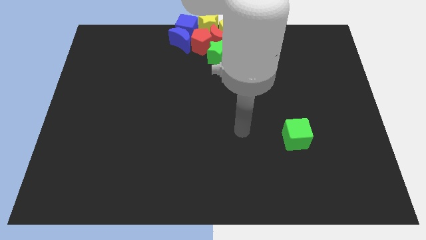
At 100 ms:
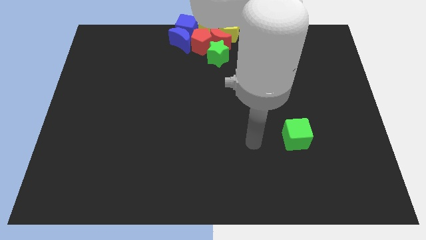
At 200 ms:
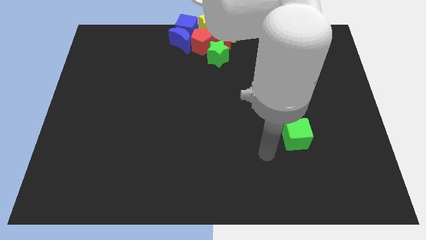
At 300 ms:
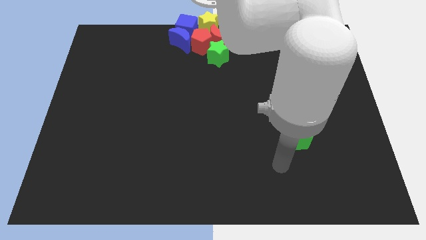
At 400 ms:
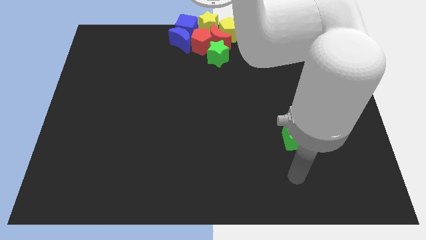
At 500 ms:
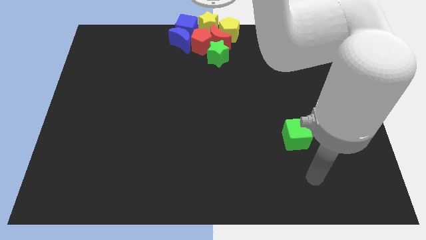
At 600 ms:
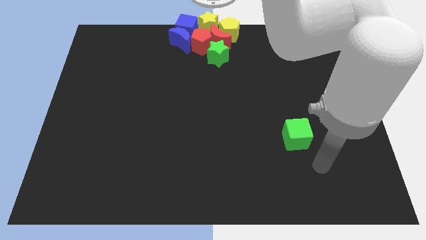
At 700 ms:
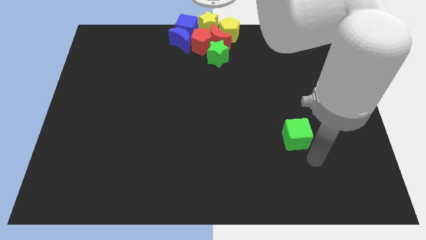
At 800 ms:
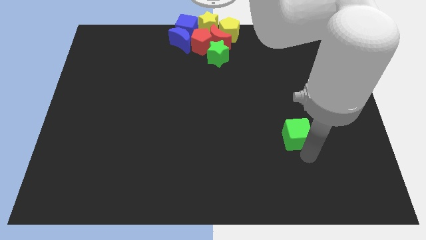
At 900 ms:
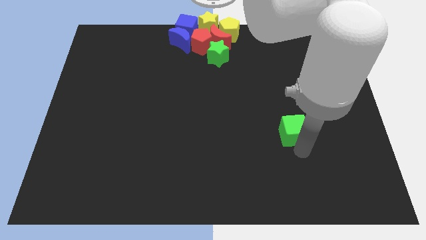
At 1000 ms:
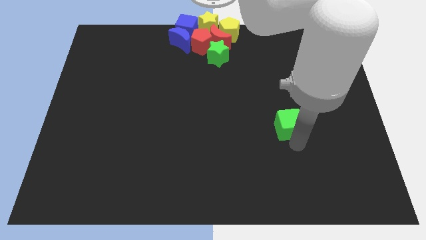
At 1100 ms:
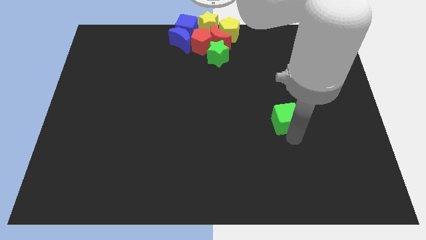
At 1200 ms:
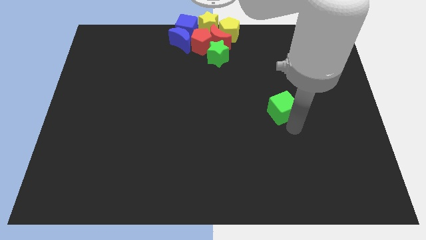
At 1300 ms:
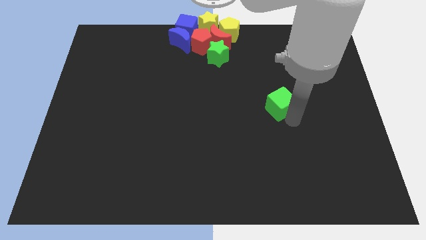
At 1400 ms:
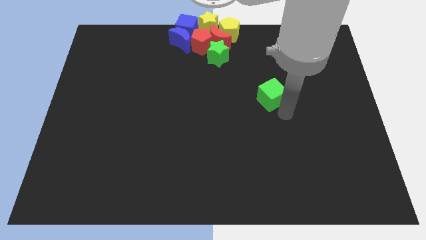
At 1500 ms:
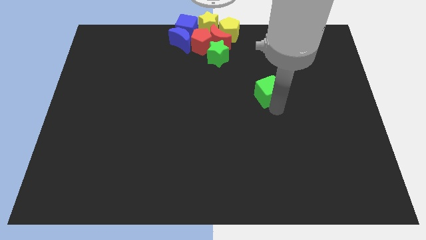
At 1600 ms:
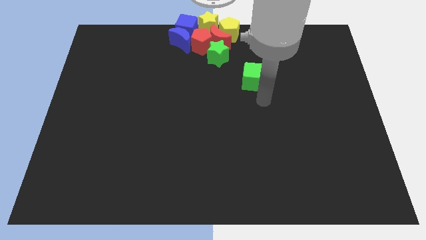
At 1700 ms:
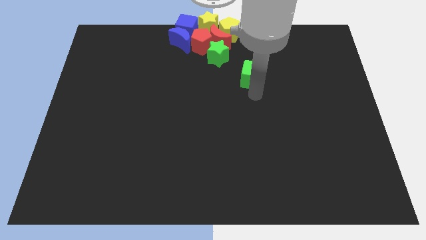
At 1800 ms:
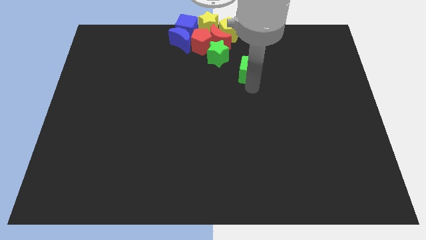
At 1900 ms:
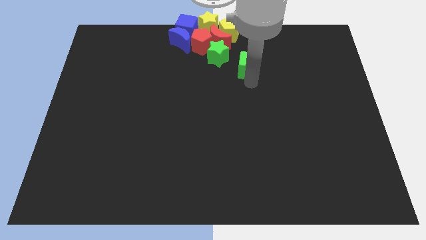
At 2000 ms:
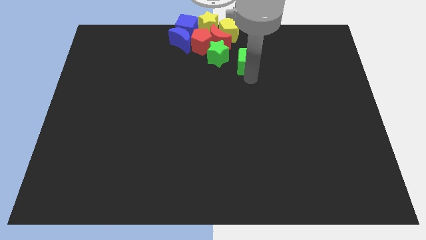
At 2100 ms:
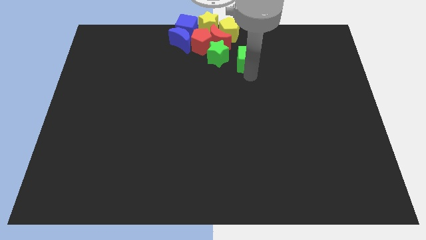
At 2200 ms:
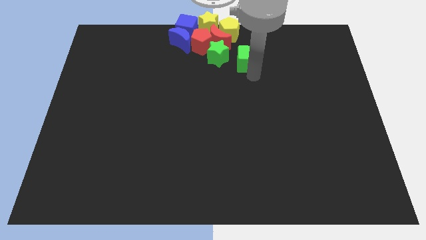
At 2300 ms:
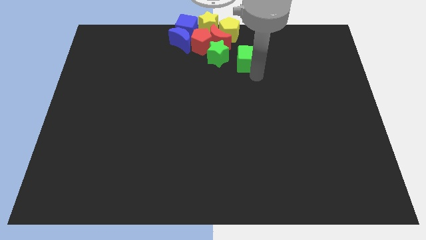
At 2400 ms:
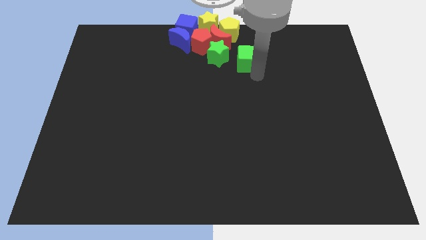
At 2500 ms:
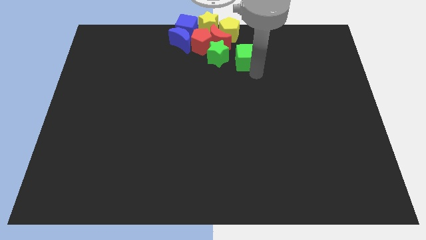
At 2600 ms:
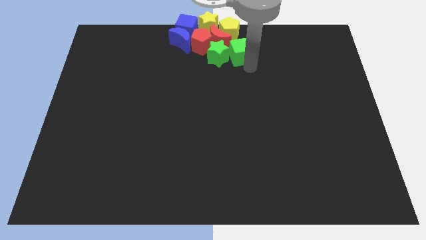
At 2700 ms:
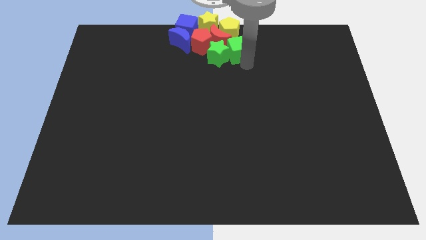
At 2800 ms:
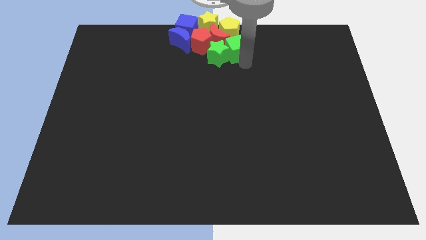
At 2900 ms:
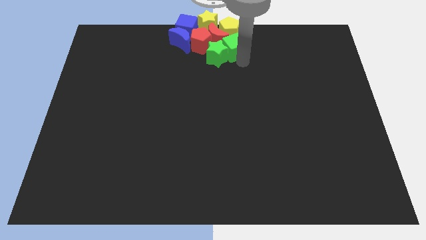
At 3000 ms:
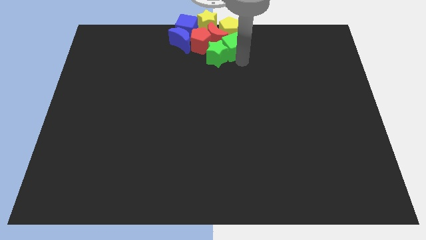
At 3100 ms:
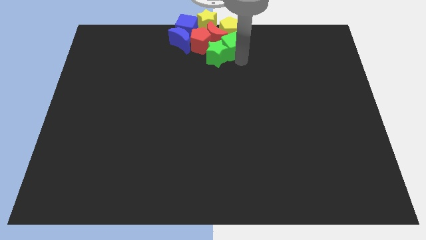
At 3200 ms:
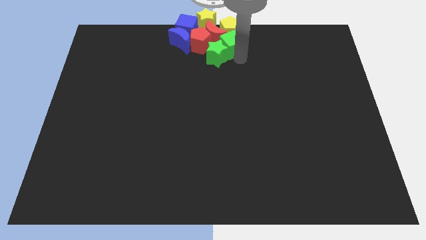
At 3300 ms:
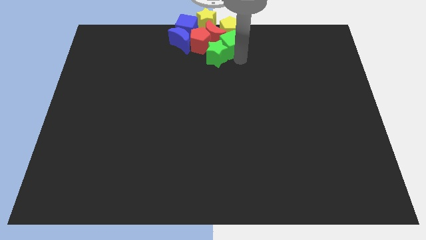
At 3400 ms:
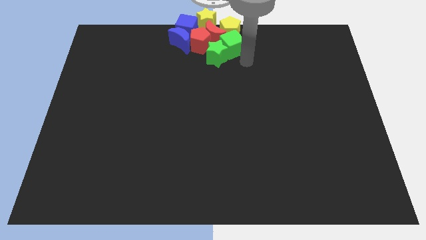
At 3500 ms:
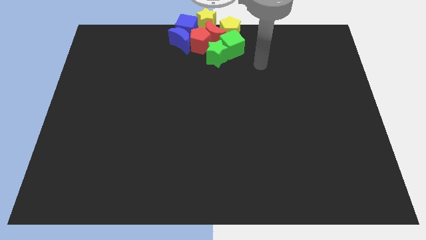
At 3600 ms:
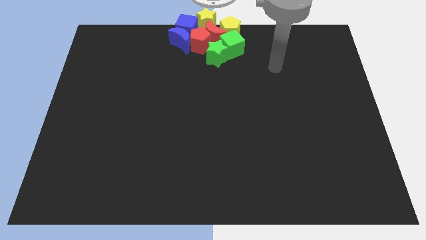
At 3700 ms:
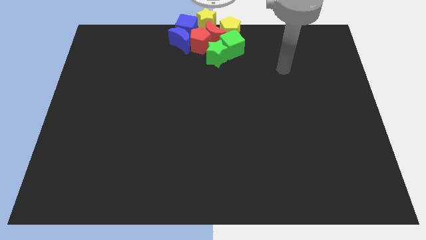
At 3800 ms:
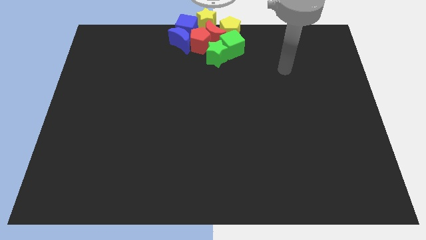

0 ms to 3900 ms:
place green block right of green star

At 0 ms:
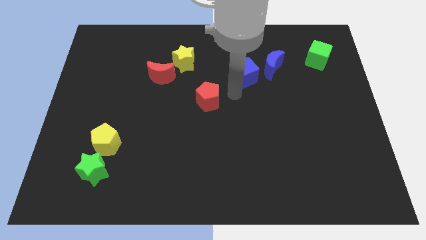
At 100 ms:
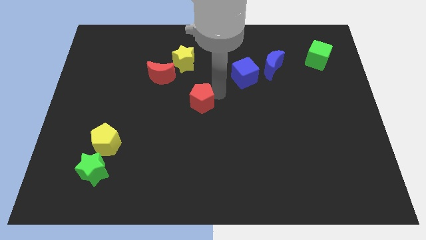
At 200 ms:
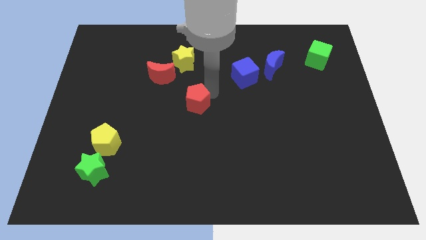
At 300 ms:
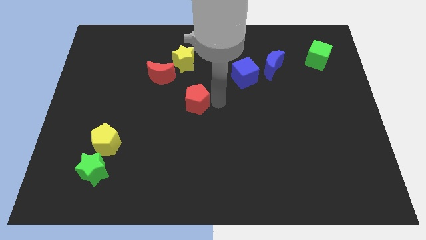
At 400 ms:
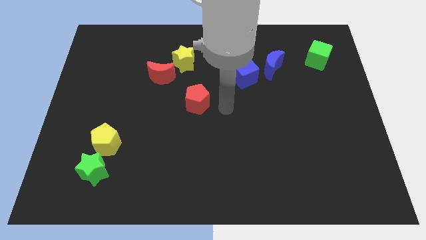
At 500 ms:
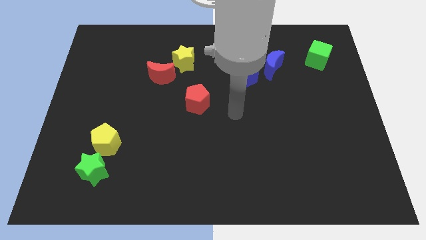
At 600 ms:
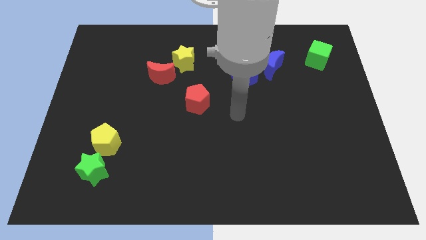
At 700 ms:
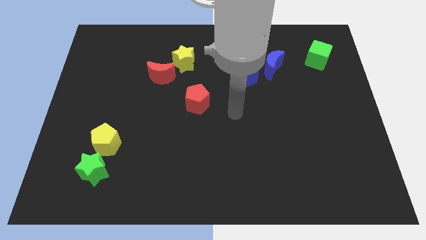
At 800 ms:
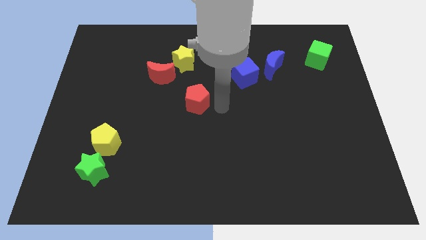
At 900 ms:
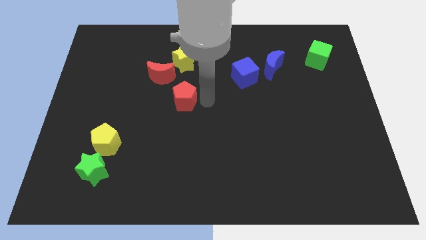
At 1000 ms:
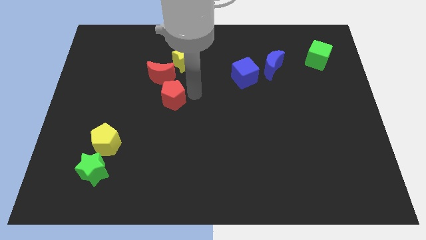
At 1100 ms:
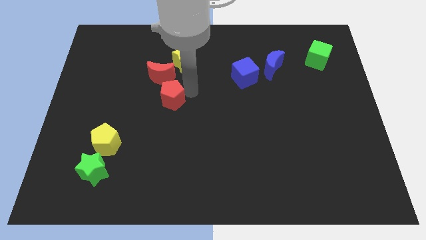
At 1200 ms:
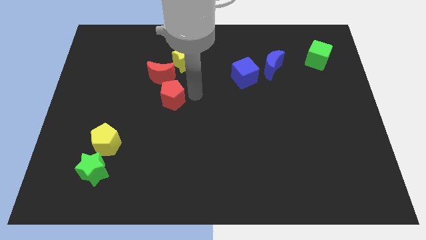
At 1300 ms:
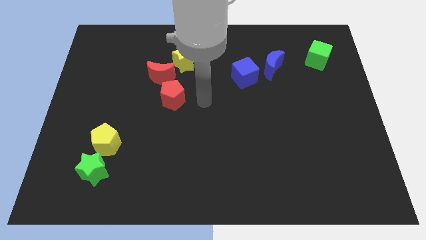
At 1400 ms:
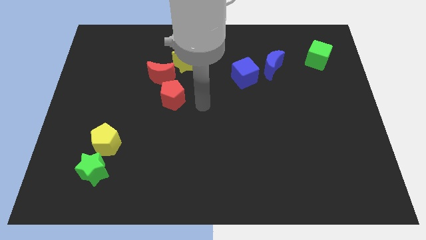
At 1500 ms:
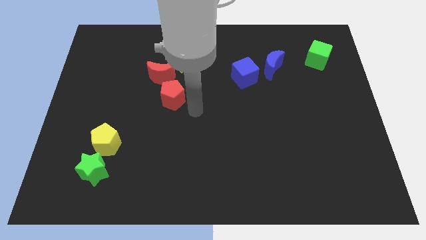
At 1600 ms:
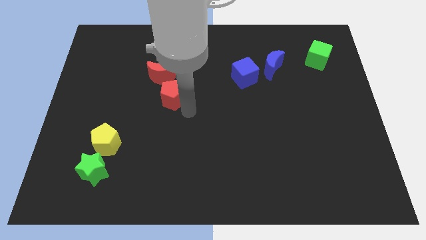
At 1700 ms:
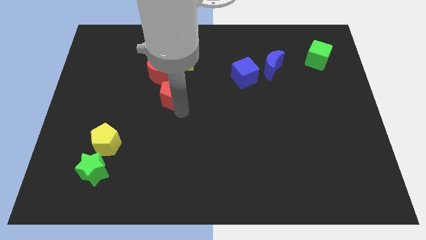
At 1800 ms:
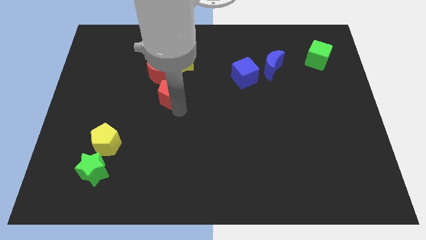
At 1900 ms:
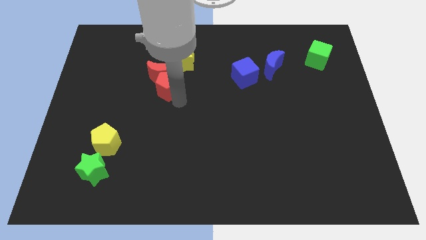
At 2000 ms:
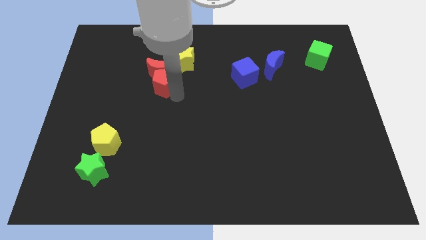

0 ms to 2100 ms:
move red pentagon into red moon

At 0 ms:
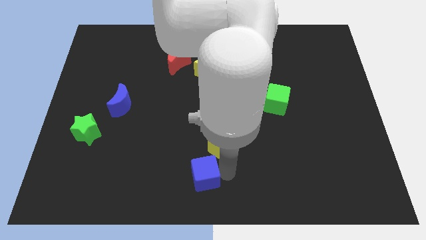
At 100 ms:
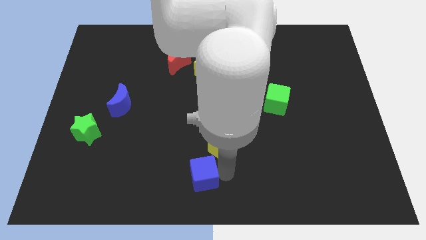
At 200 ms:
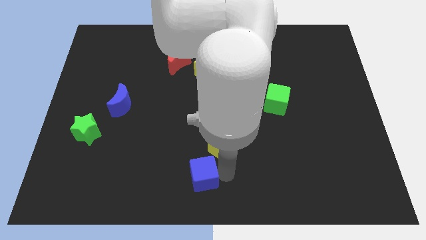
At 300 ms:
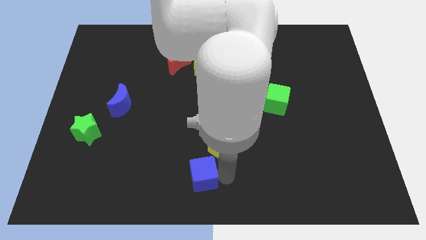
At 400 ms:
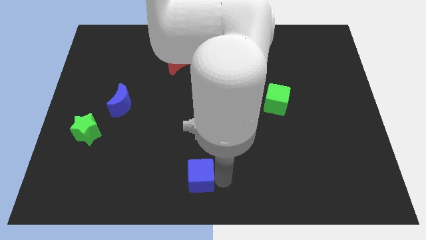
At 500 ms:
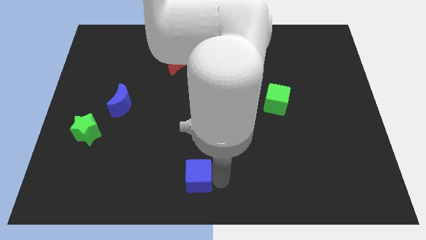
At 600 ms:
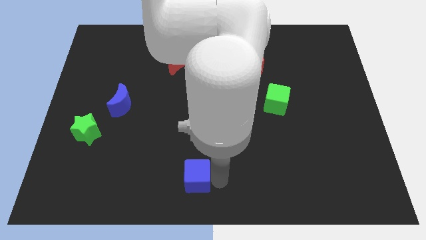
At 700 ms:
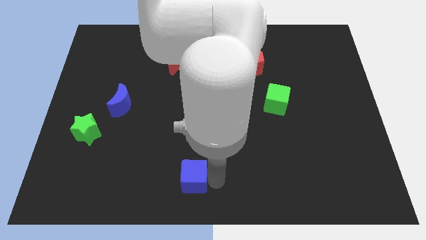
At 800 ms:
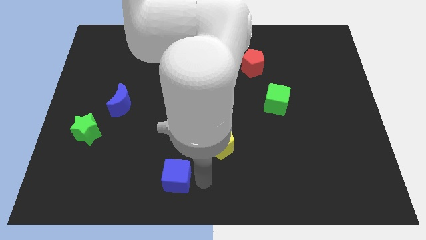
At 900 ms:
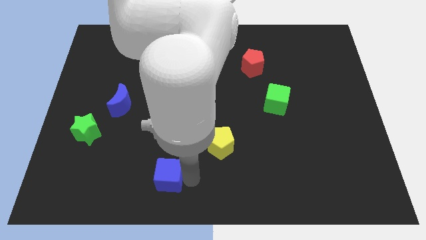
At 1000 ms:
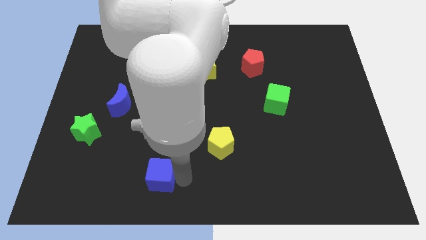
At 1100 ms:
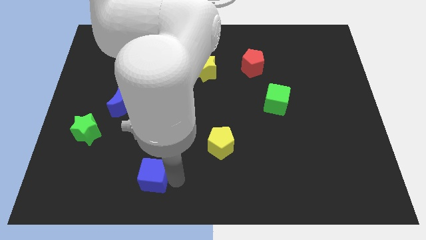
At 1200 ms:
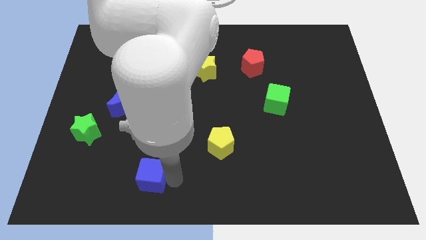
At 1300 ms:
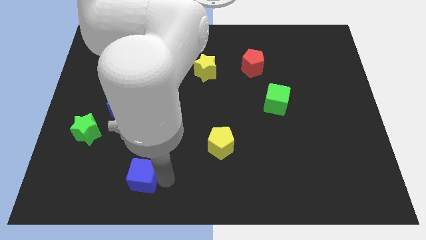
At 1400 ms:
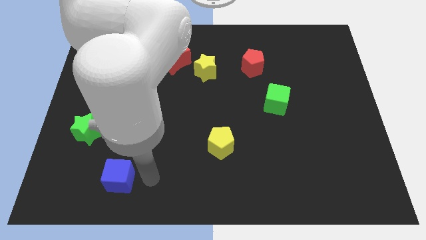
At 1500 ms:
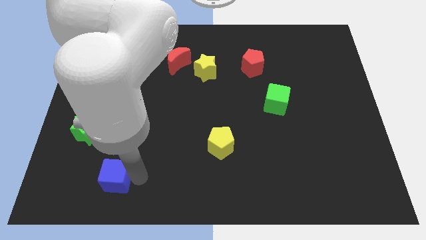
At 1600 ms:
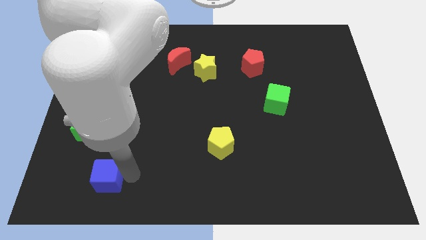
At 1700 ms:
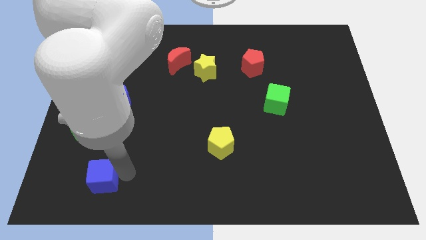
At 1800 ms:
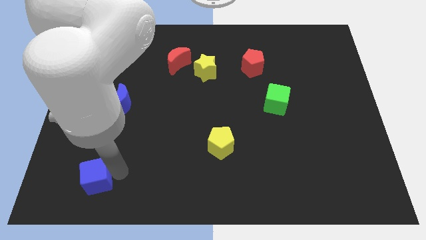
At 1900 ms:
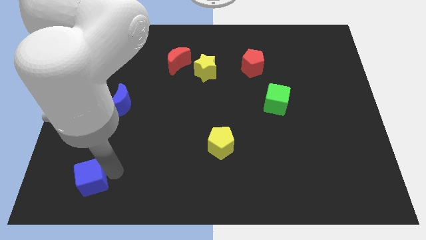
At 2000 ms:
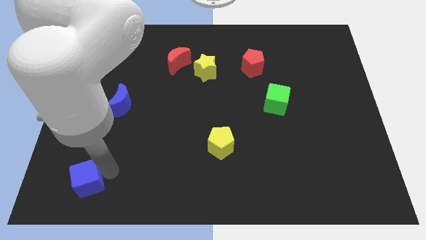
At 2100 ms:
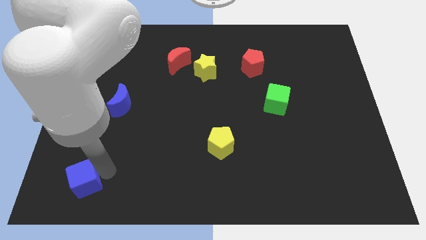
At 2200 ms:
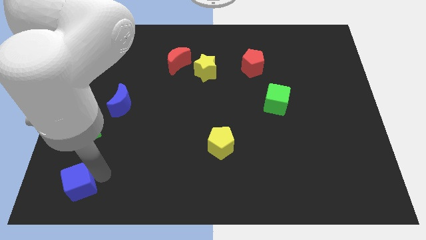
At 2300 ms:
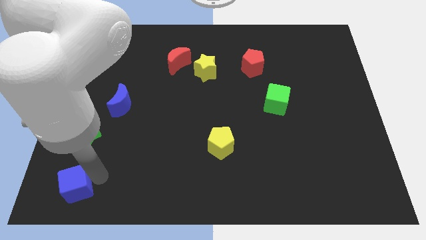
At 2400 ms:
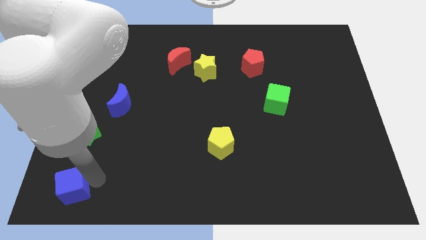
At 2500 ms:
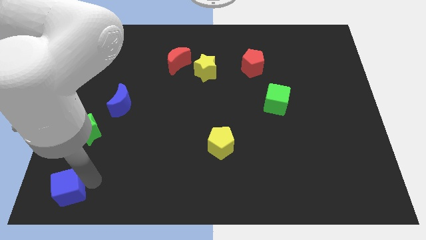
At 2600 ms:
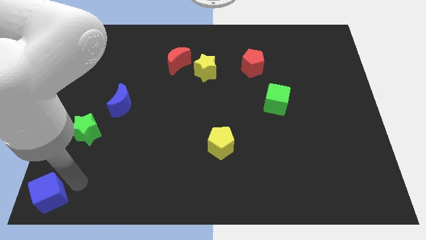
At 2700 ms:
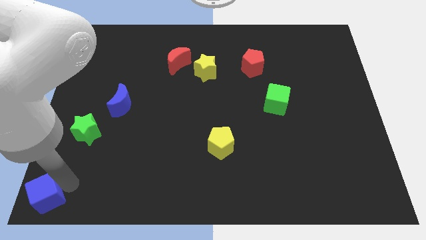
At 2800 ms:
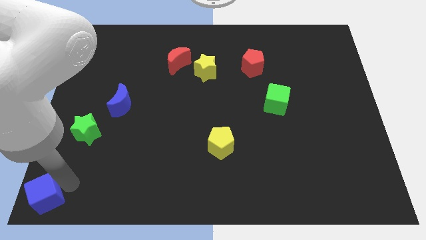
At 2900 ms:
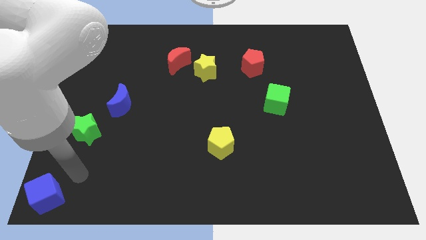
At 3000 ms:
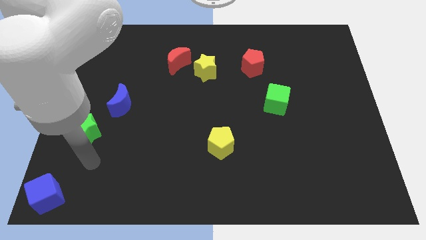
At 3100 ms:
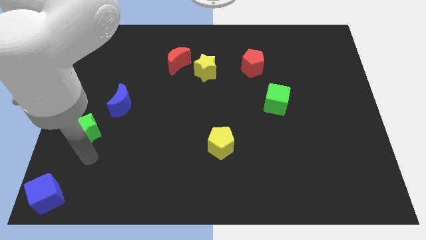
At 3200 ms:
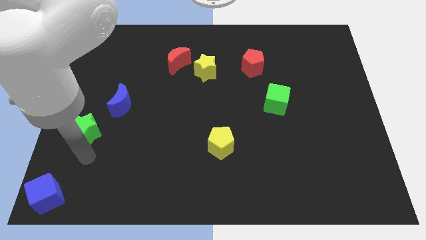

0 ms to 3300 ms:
put the blue cube diagonally bottom left to the green star
